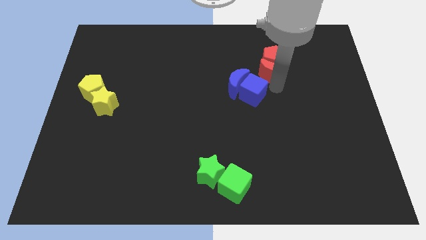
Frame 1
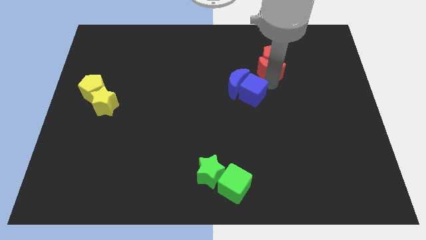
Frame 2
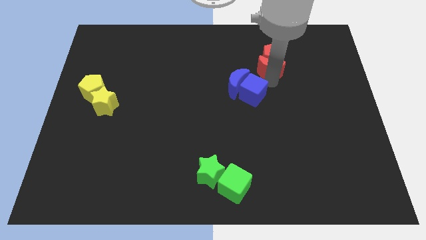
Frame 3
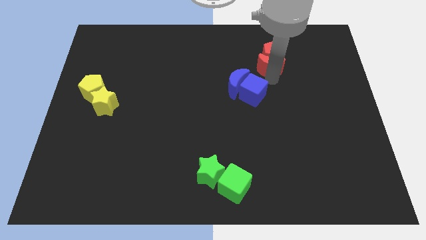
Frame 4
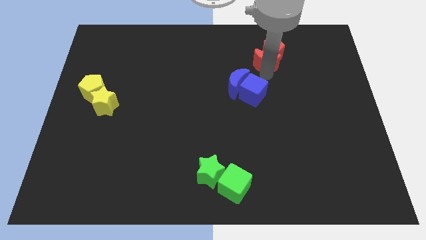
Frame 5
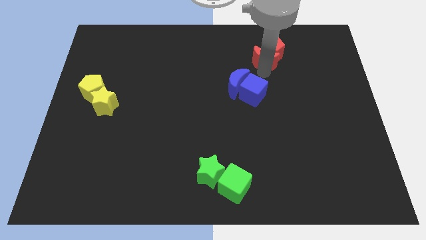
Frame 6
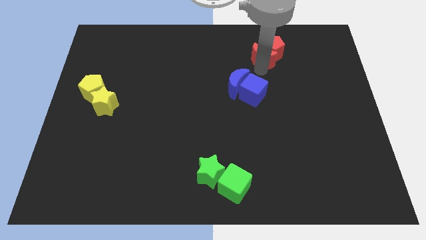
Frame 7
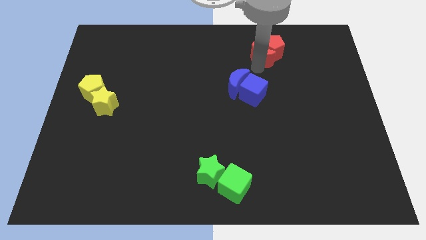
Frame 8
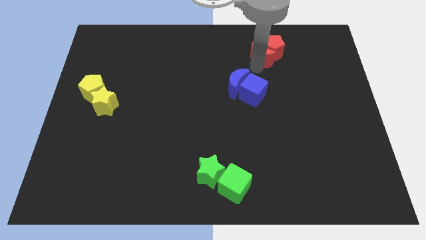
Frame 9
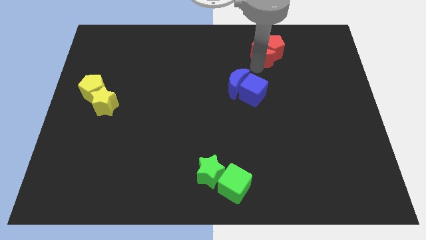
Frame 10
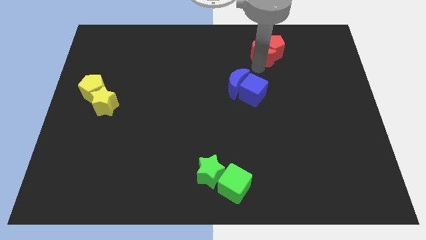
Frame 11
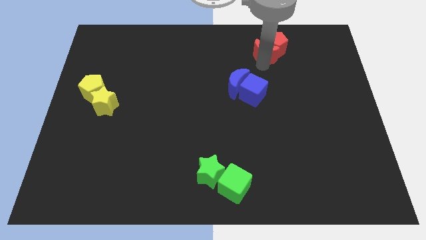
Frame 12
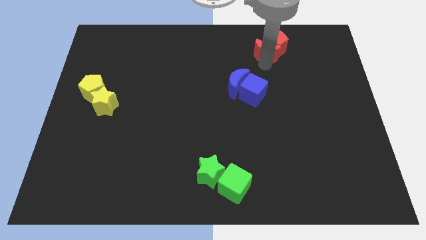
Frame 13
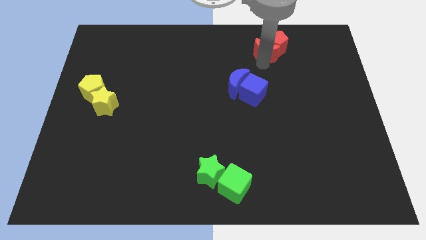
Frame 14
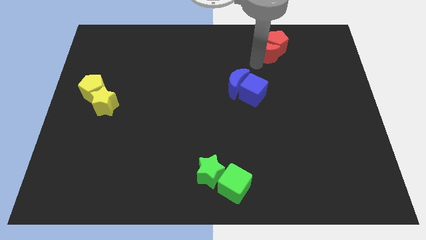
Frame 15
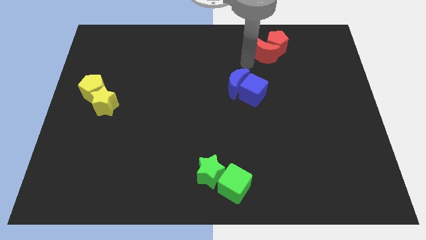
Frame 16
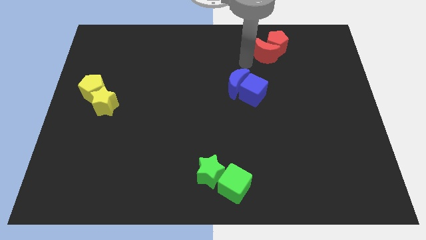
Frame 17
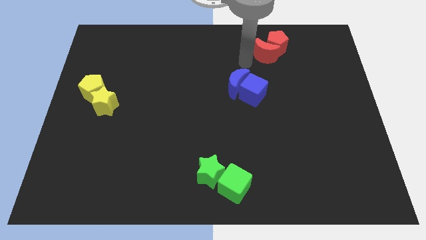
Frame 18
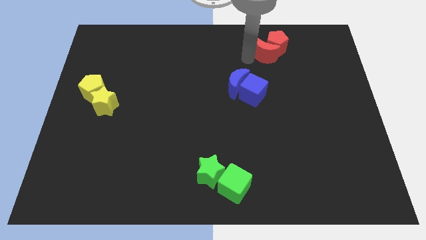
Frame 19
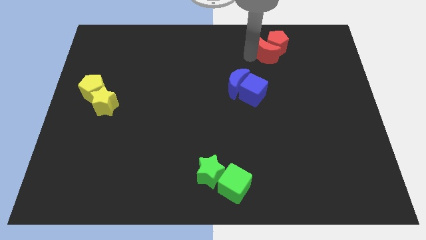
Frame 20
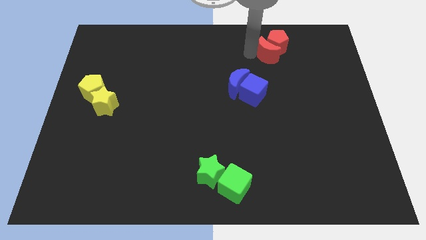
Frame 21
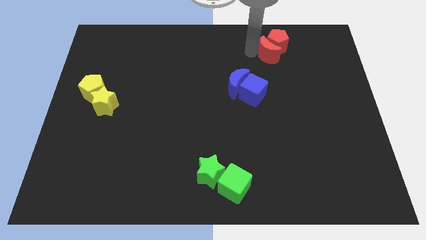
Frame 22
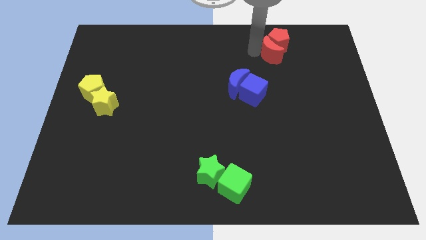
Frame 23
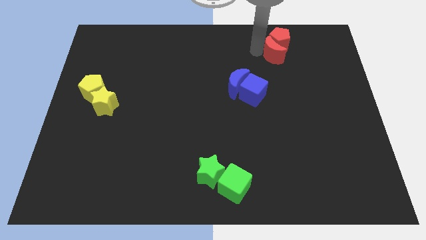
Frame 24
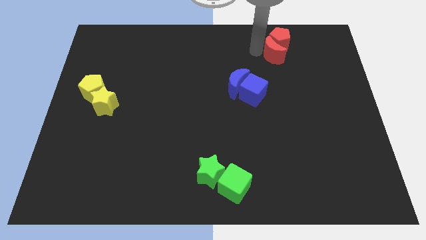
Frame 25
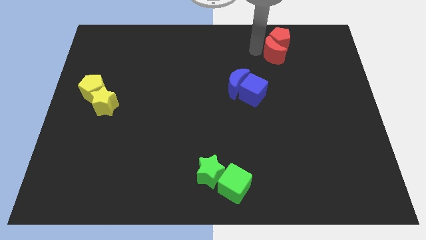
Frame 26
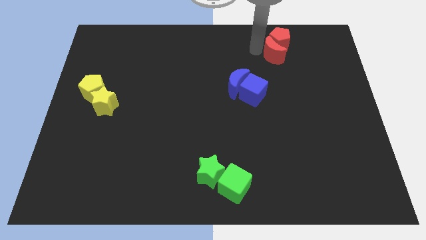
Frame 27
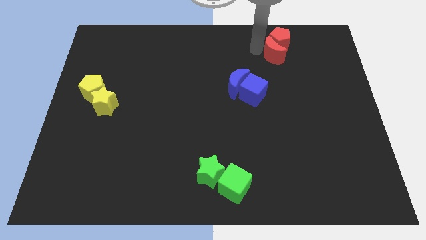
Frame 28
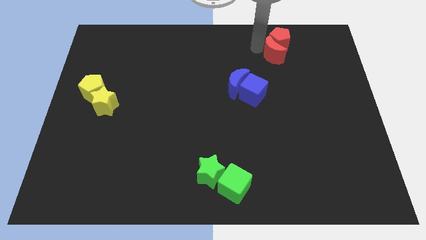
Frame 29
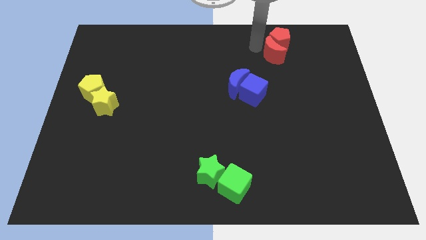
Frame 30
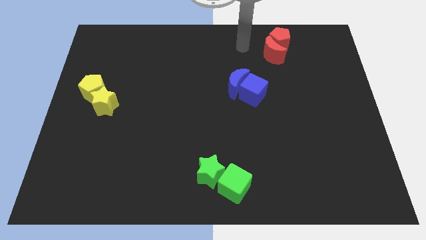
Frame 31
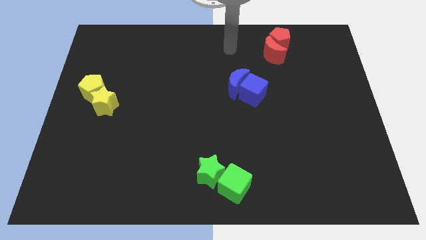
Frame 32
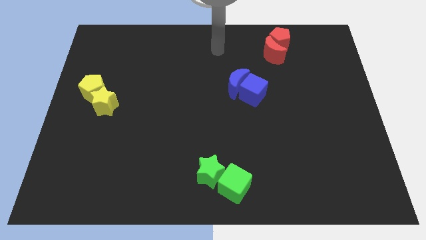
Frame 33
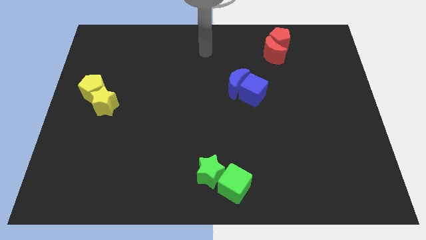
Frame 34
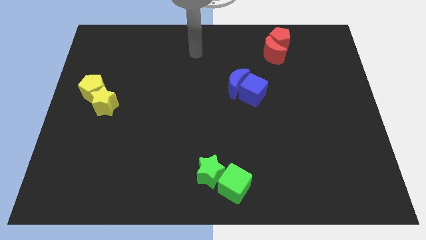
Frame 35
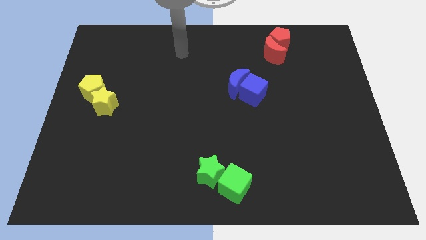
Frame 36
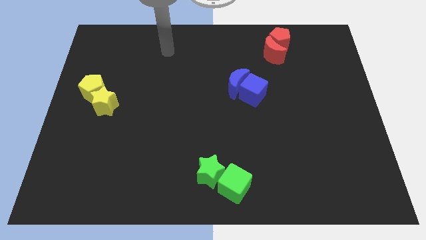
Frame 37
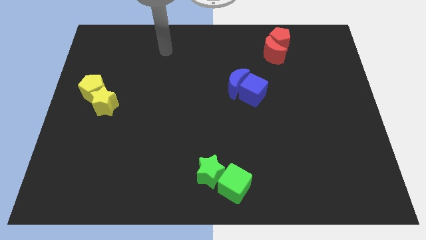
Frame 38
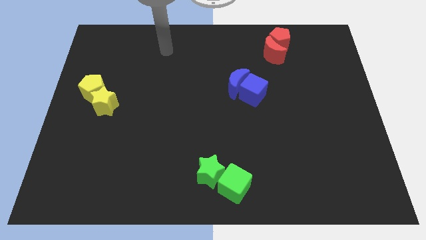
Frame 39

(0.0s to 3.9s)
move red blocks towards the top of the board

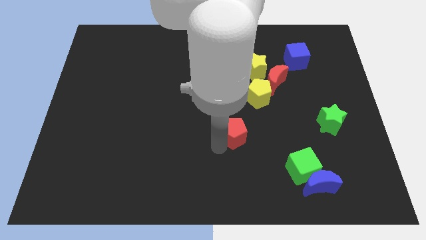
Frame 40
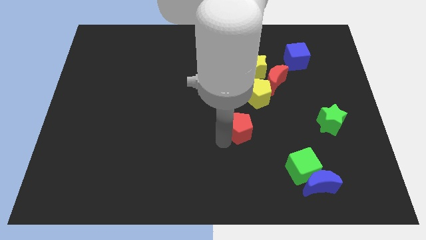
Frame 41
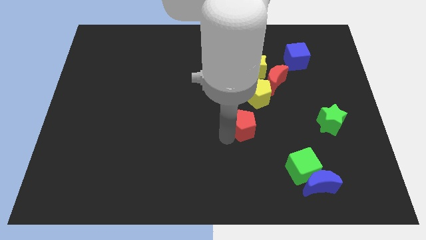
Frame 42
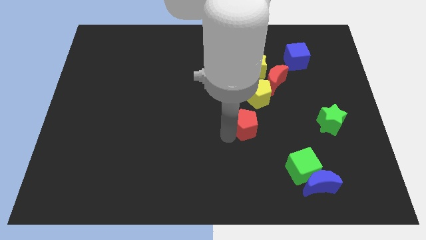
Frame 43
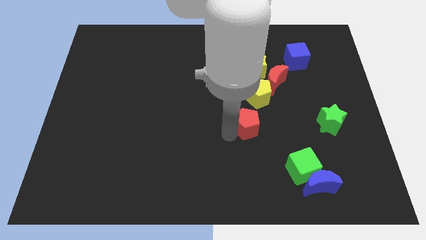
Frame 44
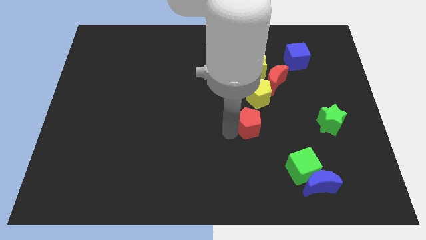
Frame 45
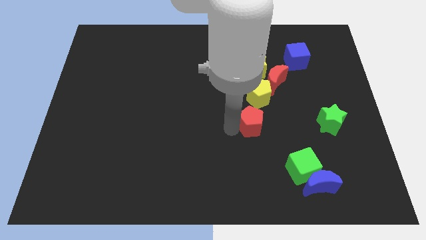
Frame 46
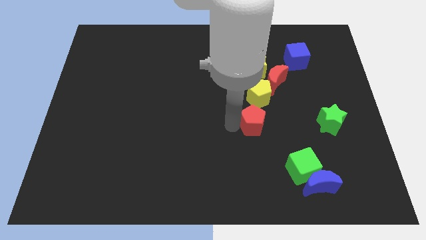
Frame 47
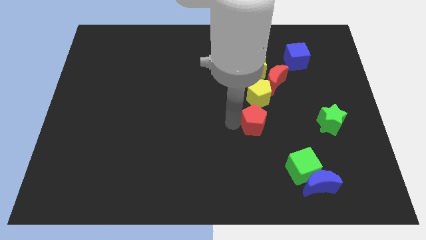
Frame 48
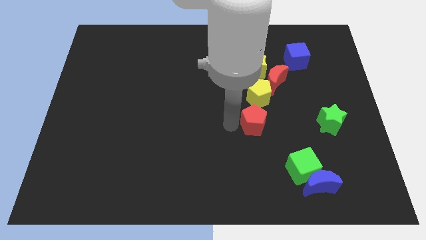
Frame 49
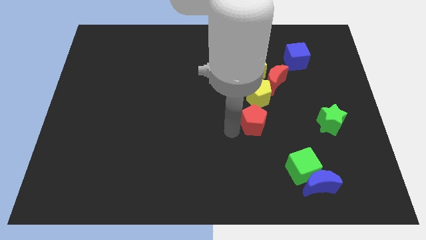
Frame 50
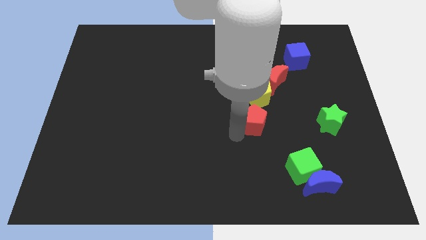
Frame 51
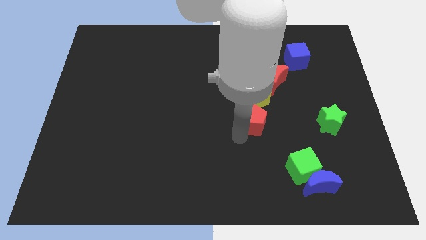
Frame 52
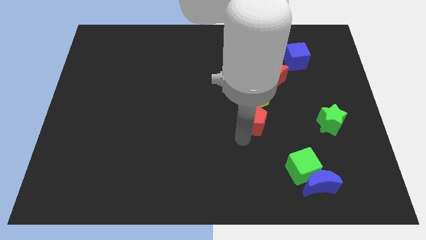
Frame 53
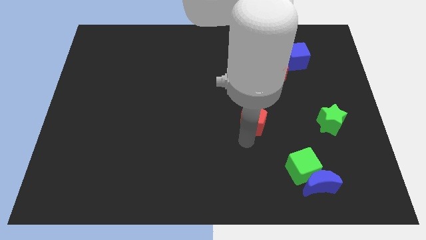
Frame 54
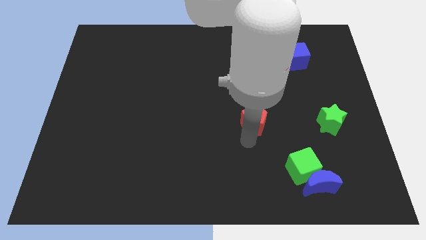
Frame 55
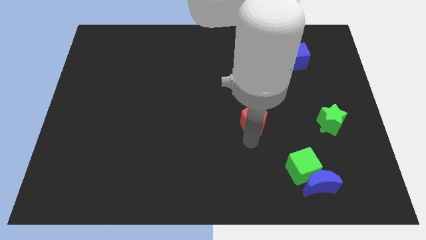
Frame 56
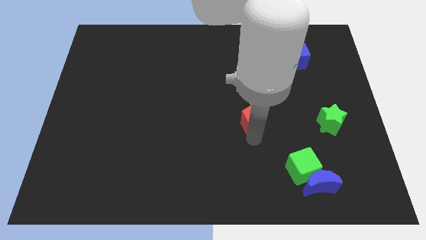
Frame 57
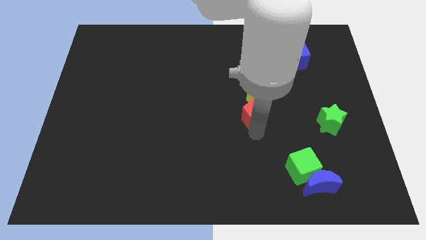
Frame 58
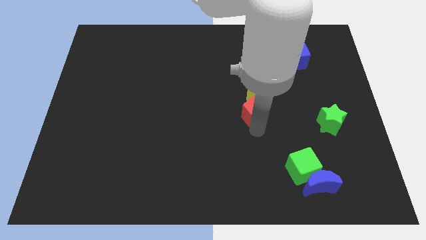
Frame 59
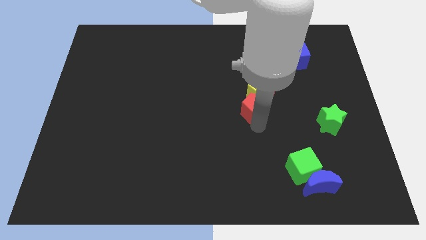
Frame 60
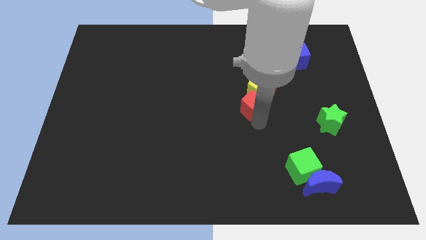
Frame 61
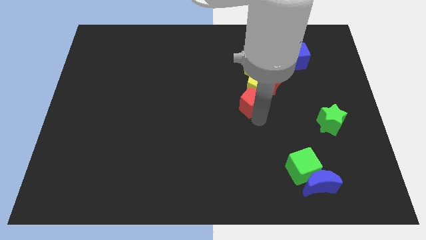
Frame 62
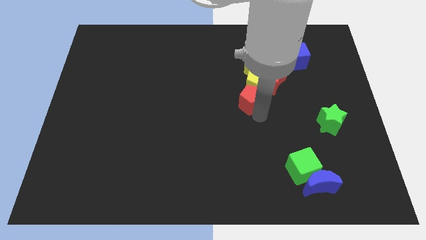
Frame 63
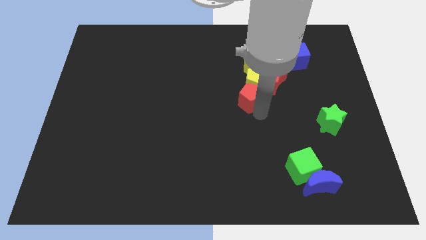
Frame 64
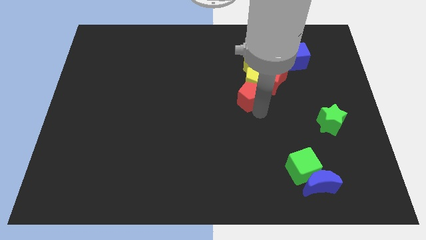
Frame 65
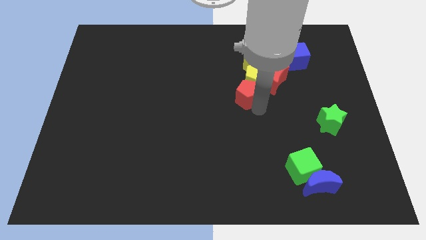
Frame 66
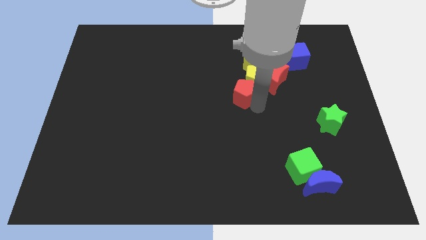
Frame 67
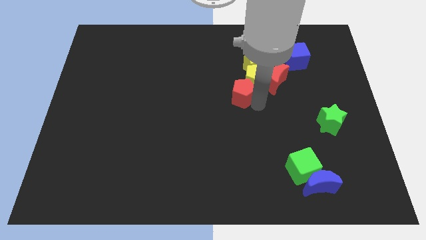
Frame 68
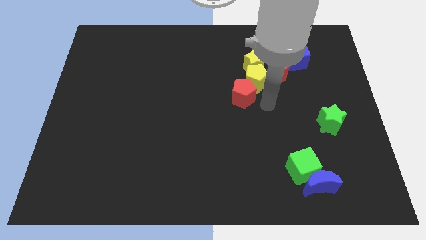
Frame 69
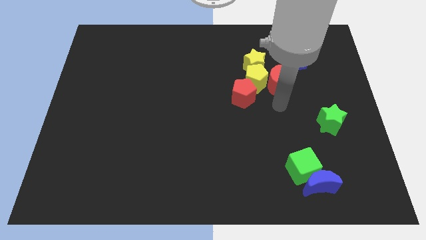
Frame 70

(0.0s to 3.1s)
push the yellow pentagon upwards with the red pentagon

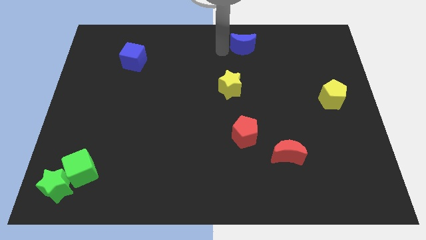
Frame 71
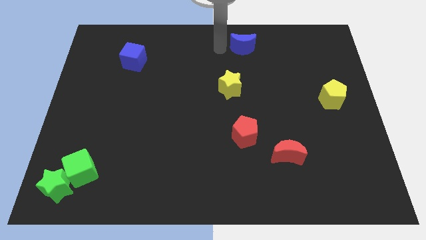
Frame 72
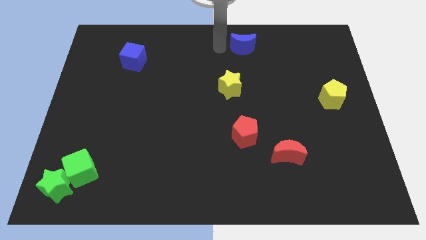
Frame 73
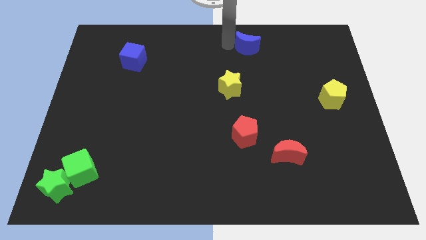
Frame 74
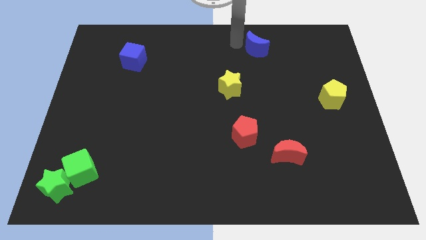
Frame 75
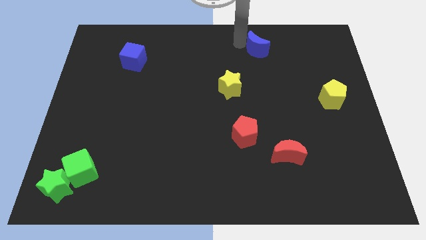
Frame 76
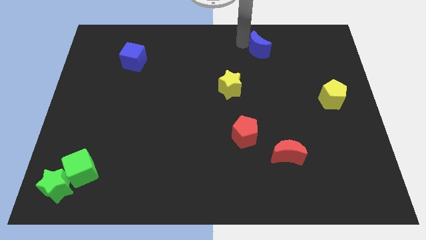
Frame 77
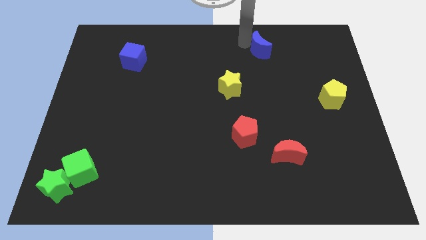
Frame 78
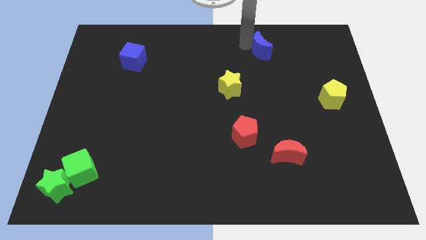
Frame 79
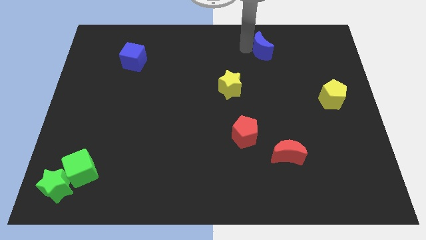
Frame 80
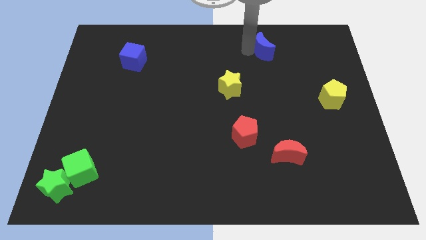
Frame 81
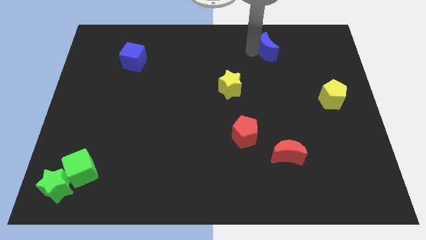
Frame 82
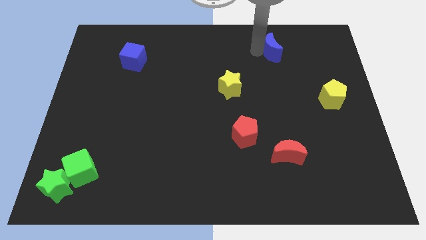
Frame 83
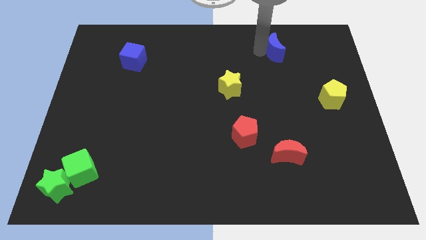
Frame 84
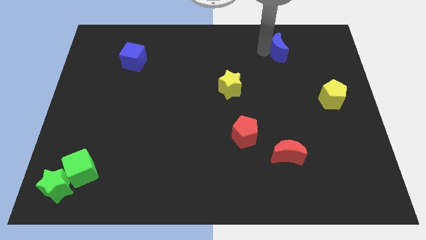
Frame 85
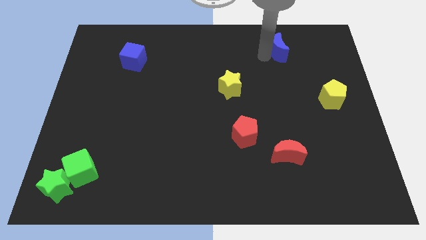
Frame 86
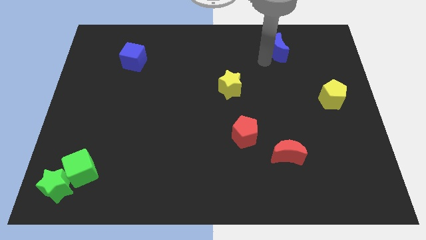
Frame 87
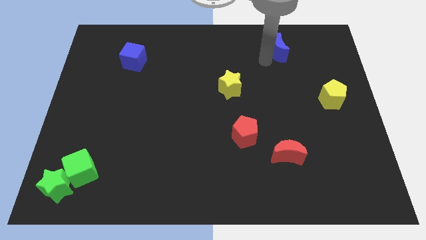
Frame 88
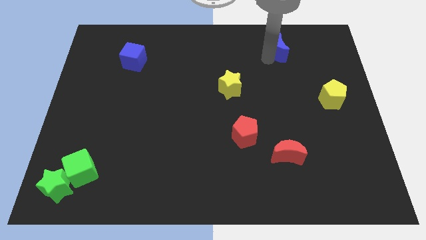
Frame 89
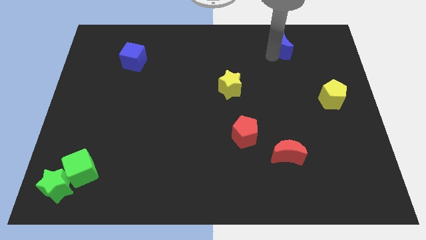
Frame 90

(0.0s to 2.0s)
move the blue crescent slightly to the right side of the board

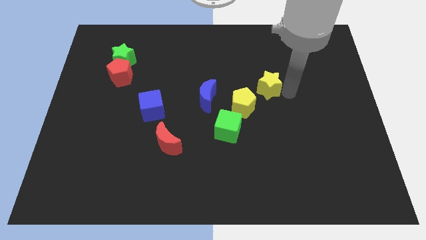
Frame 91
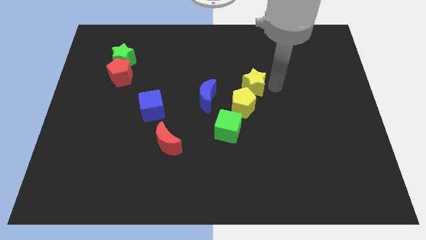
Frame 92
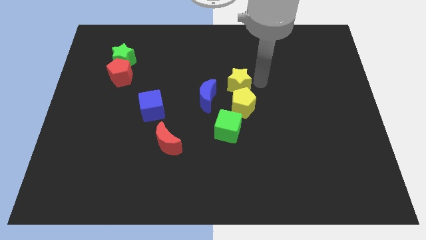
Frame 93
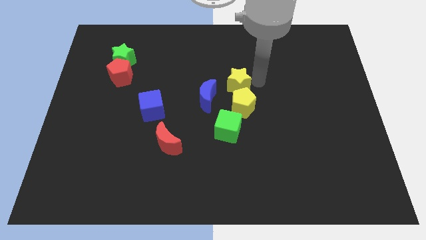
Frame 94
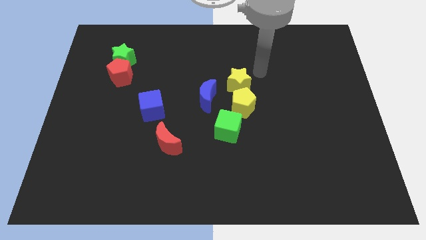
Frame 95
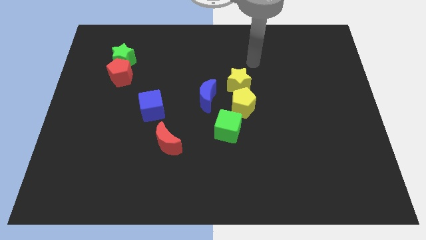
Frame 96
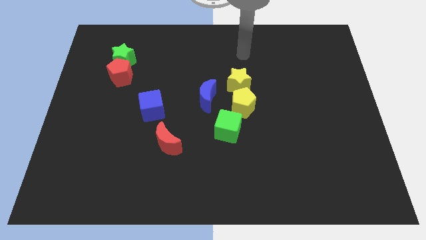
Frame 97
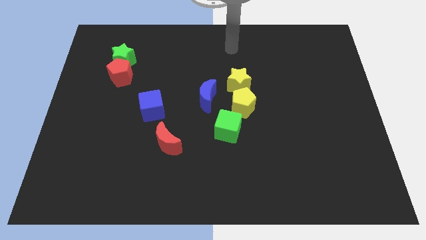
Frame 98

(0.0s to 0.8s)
place the yellow star above the yellow pentagon
